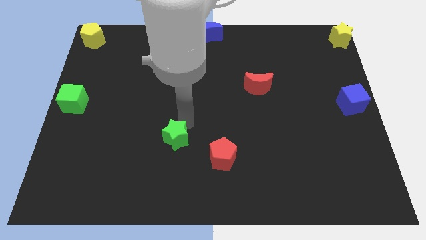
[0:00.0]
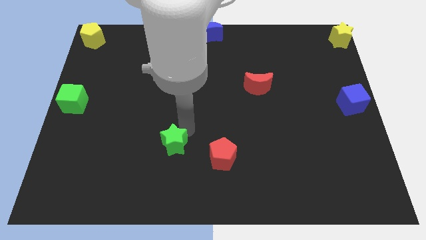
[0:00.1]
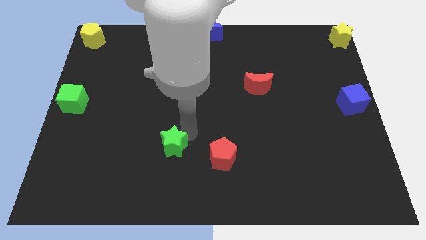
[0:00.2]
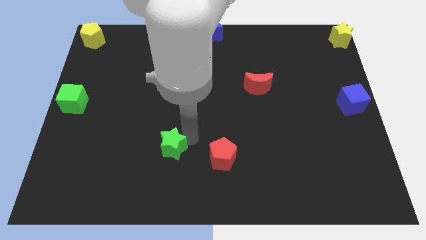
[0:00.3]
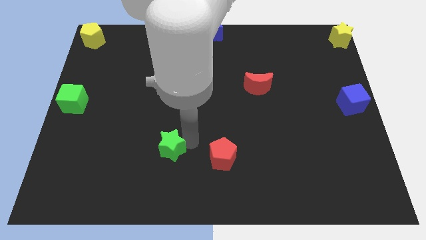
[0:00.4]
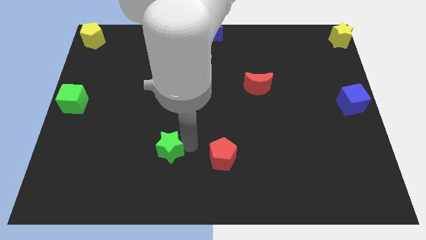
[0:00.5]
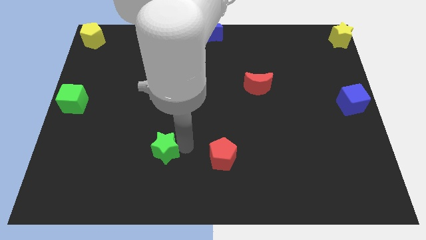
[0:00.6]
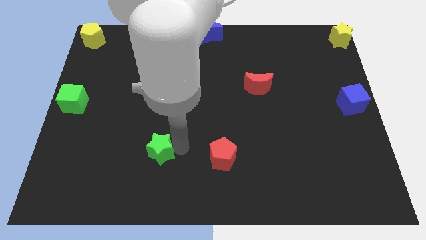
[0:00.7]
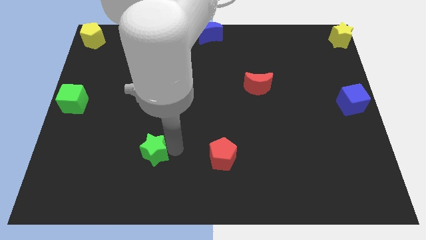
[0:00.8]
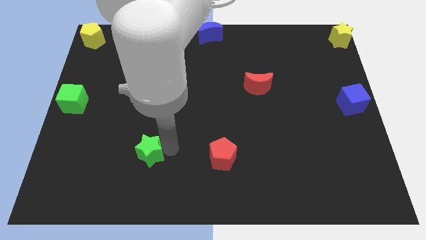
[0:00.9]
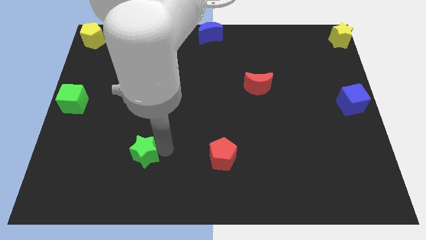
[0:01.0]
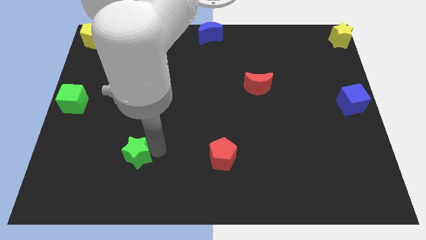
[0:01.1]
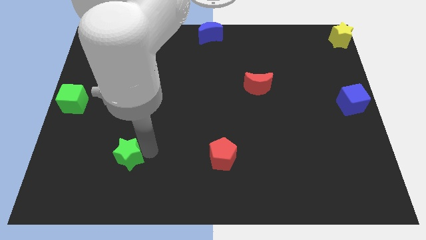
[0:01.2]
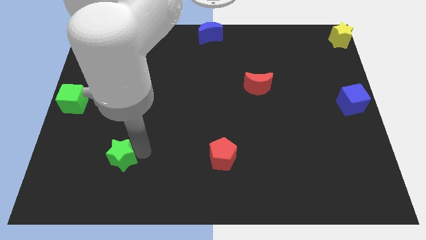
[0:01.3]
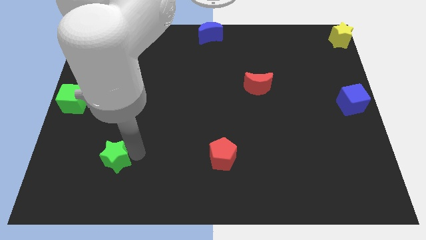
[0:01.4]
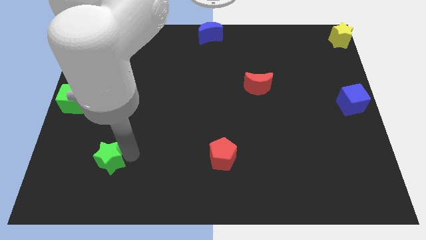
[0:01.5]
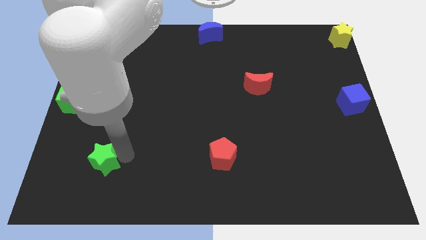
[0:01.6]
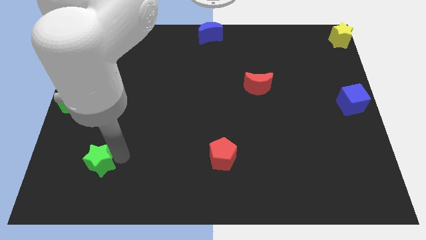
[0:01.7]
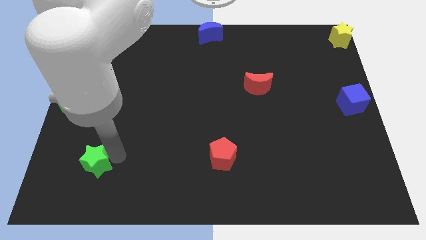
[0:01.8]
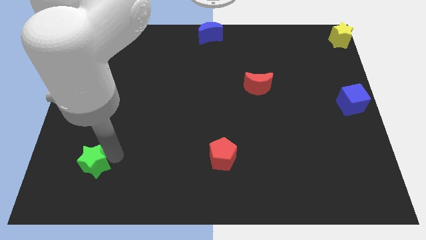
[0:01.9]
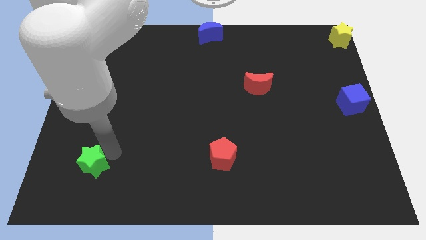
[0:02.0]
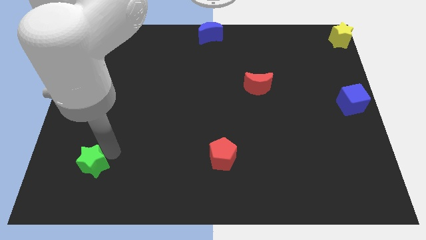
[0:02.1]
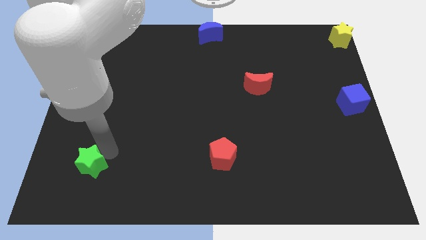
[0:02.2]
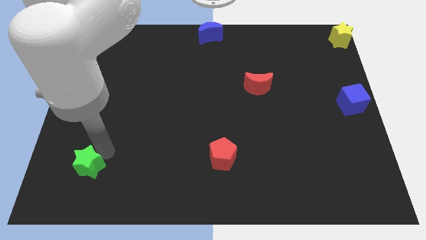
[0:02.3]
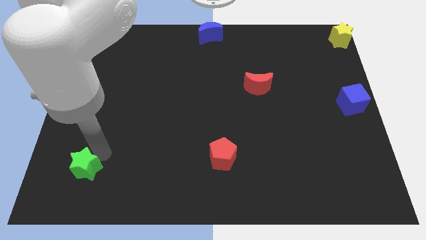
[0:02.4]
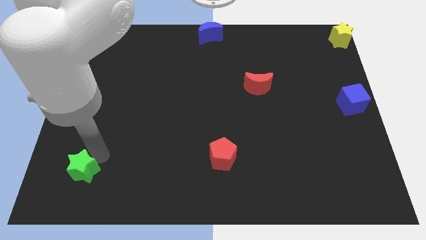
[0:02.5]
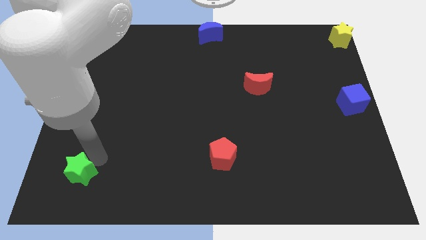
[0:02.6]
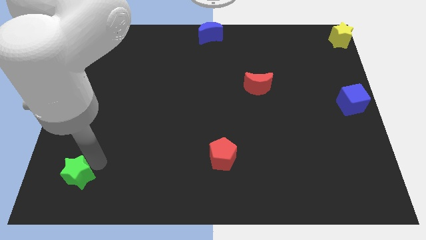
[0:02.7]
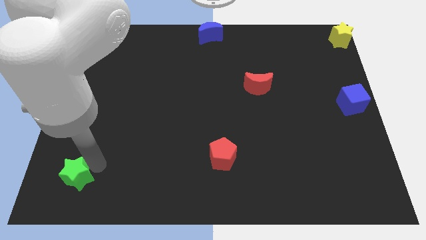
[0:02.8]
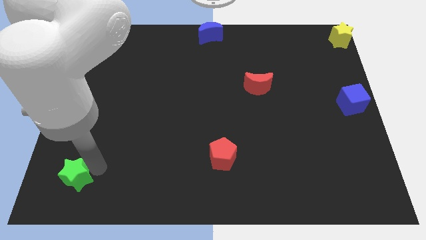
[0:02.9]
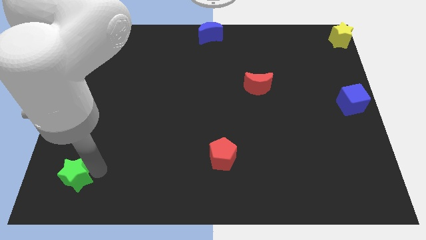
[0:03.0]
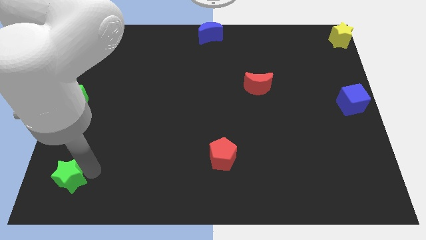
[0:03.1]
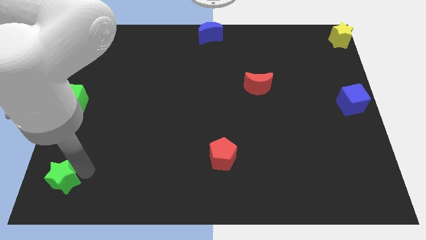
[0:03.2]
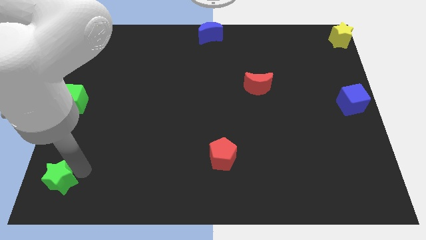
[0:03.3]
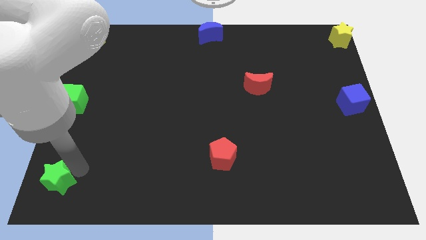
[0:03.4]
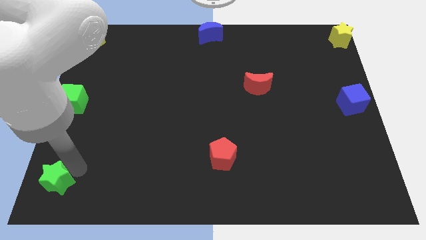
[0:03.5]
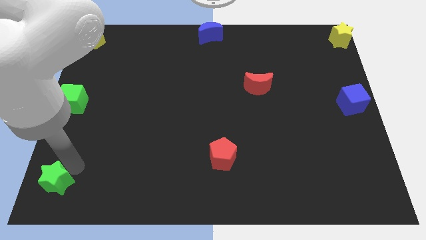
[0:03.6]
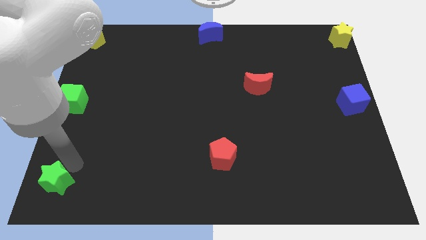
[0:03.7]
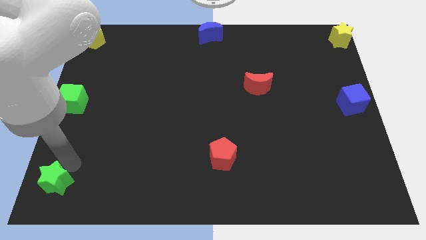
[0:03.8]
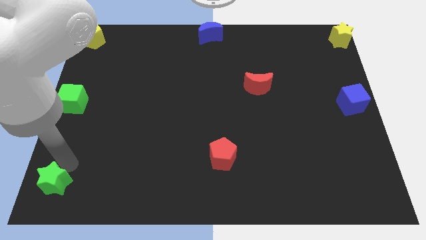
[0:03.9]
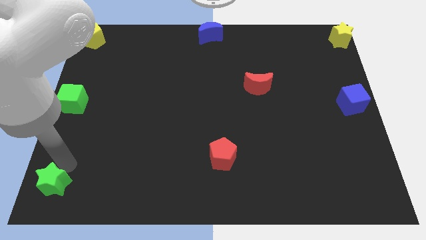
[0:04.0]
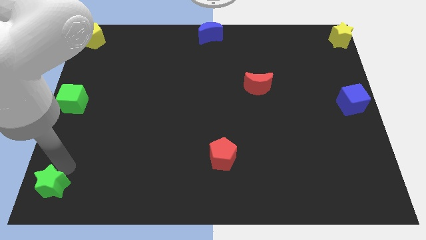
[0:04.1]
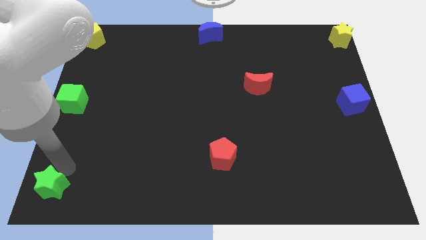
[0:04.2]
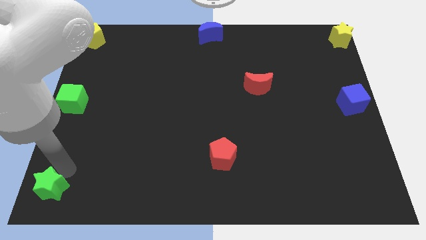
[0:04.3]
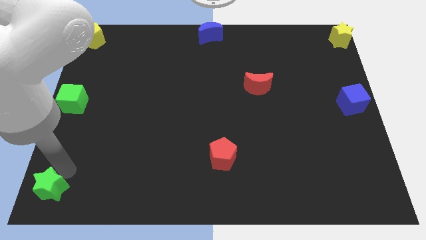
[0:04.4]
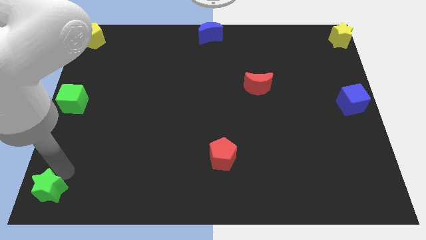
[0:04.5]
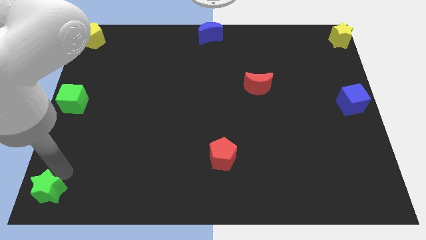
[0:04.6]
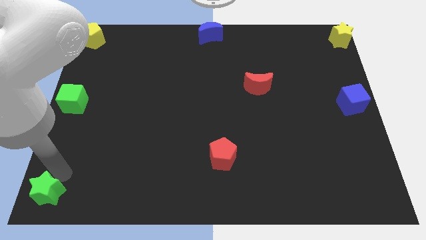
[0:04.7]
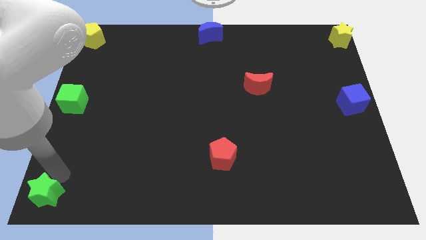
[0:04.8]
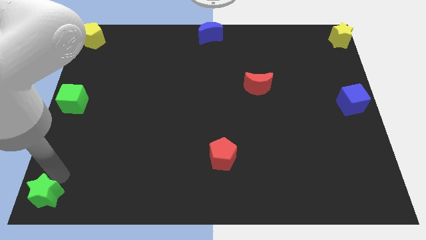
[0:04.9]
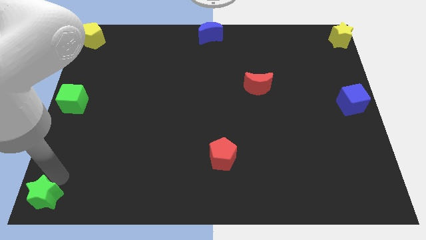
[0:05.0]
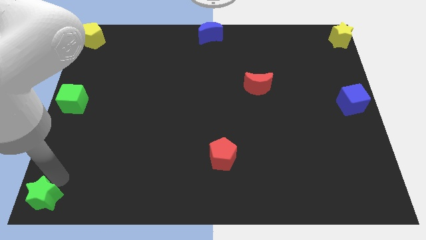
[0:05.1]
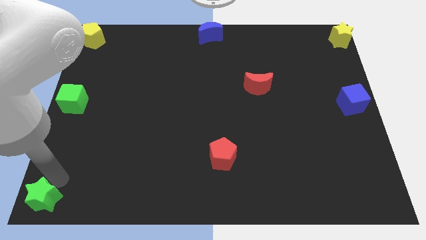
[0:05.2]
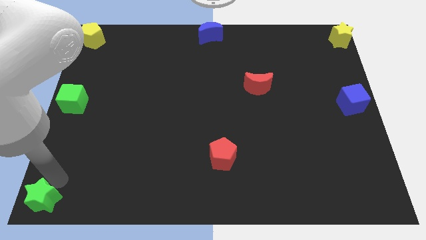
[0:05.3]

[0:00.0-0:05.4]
push the green star to the bottom left of the board

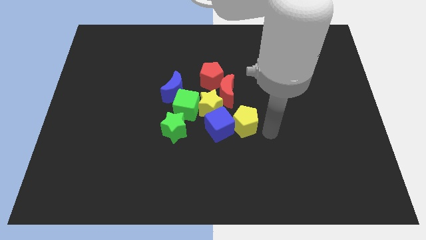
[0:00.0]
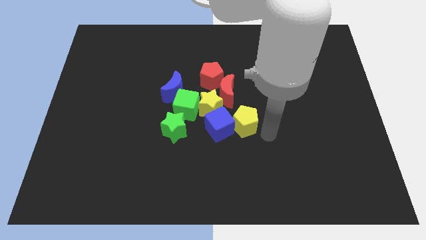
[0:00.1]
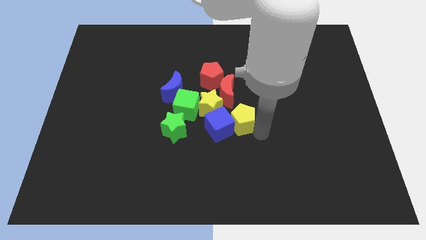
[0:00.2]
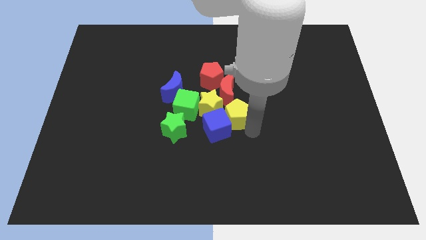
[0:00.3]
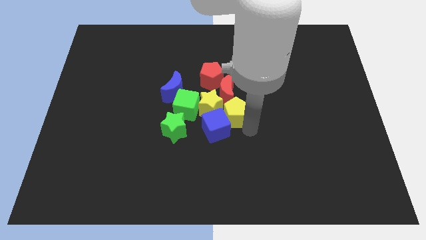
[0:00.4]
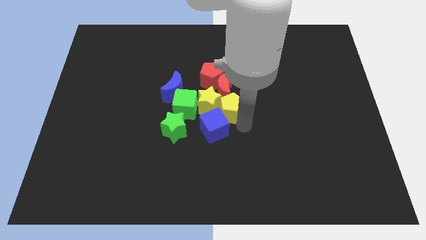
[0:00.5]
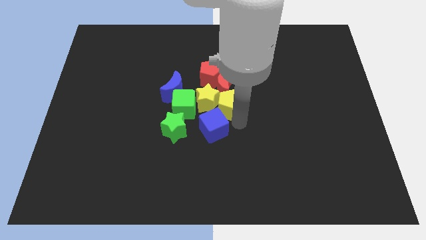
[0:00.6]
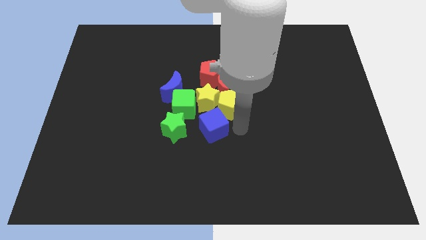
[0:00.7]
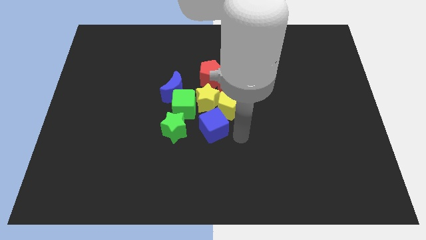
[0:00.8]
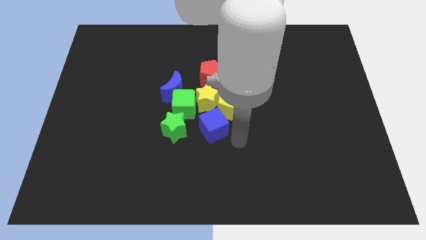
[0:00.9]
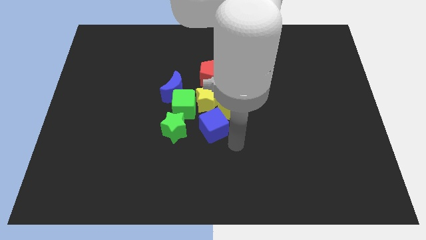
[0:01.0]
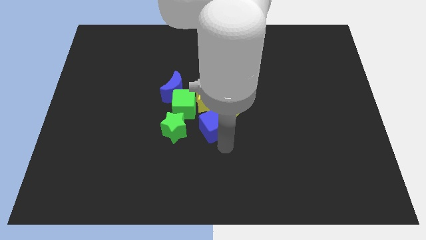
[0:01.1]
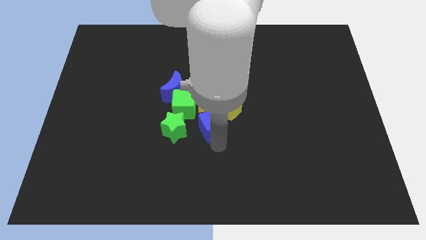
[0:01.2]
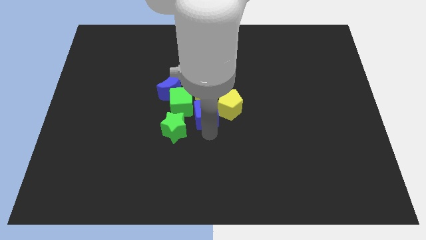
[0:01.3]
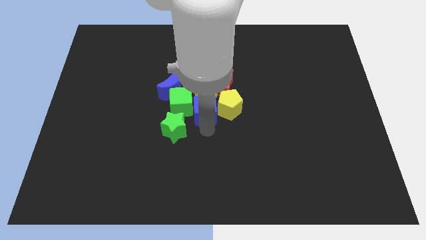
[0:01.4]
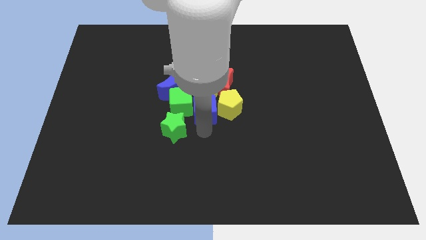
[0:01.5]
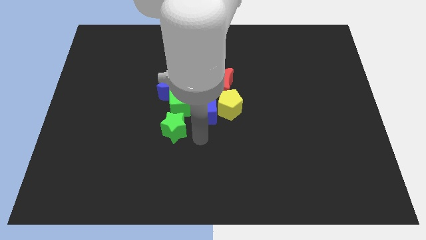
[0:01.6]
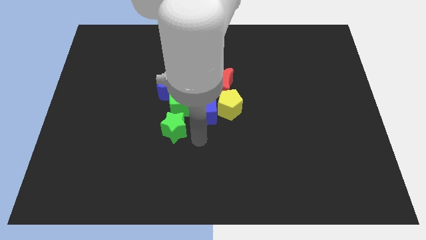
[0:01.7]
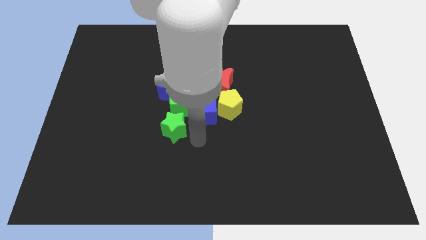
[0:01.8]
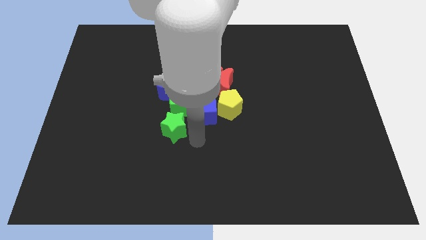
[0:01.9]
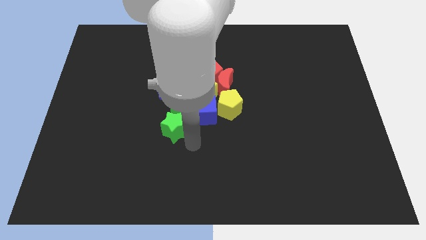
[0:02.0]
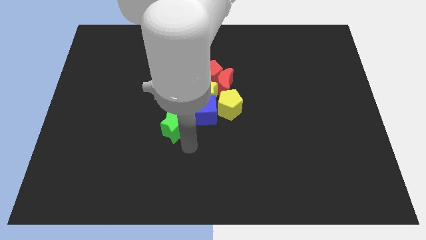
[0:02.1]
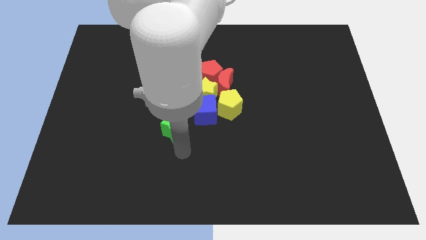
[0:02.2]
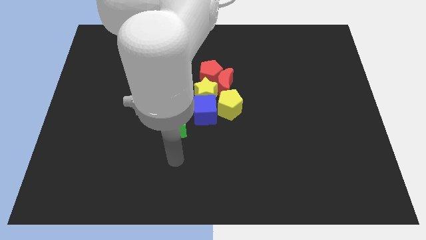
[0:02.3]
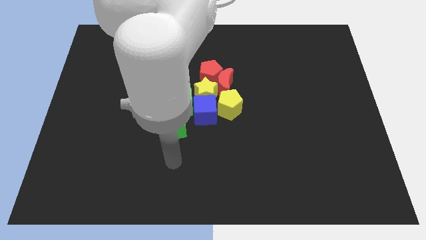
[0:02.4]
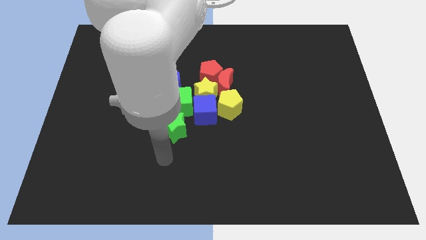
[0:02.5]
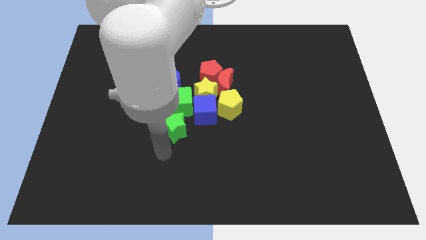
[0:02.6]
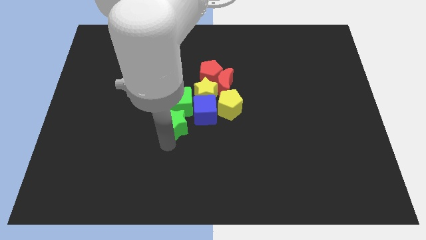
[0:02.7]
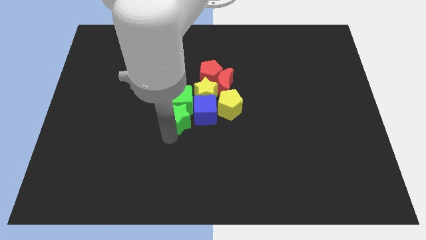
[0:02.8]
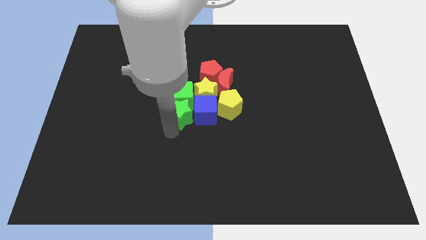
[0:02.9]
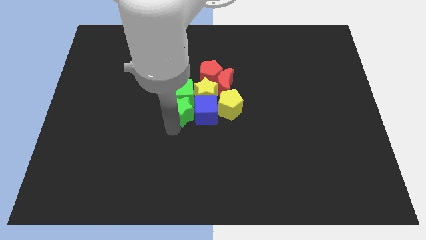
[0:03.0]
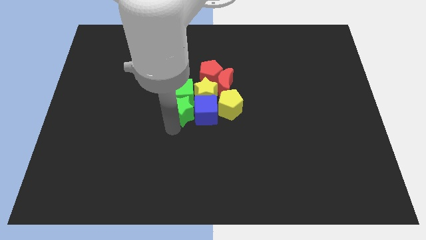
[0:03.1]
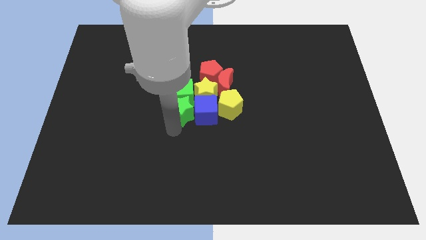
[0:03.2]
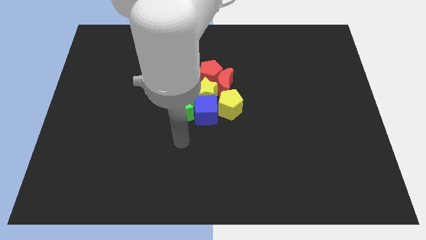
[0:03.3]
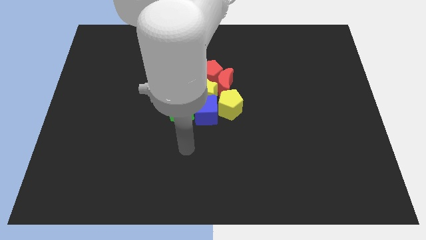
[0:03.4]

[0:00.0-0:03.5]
adjust all the blocks to the center of the board to form a group of blocks
